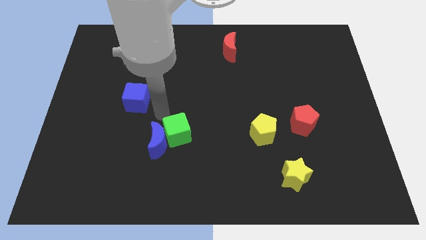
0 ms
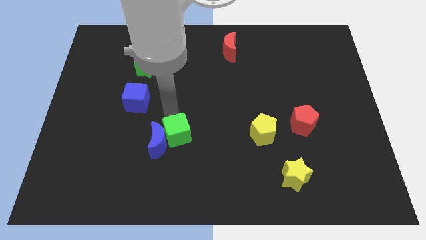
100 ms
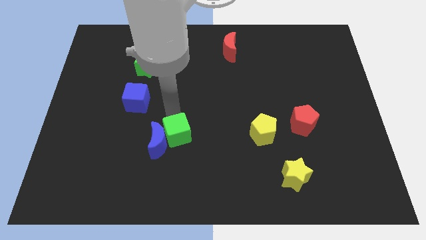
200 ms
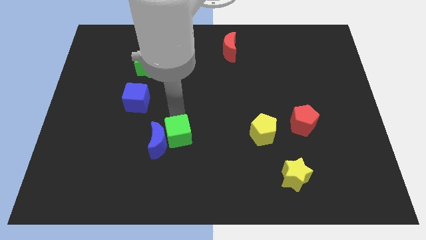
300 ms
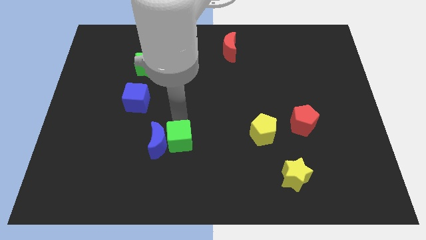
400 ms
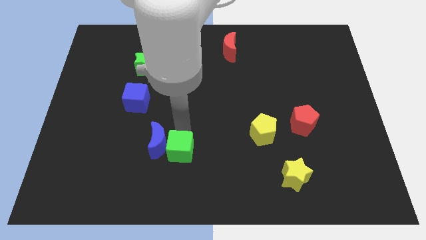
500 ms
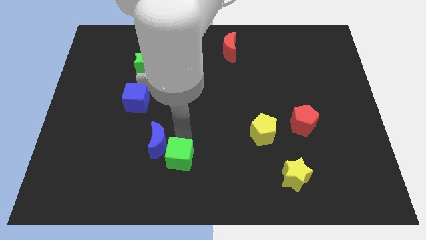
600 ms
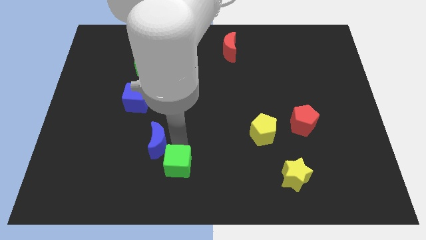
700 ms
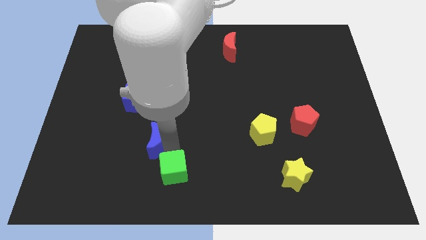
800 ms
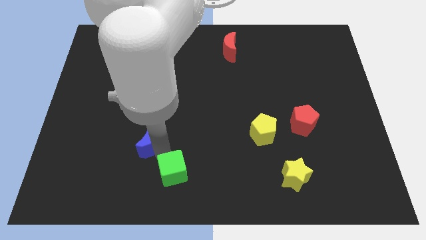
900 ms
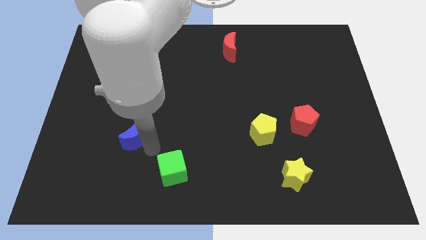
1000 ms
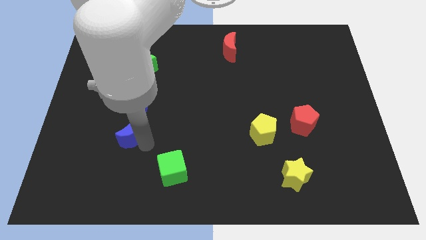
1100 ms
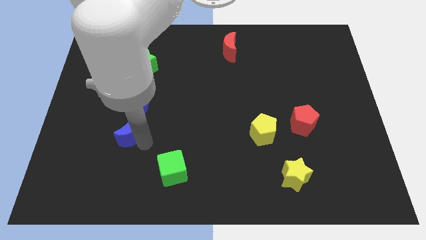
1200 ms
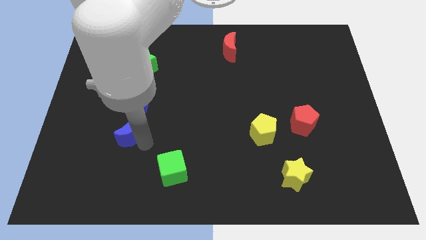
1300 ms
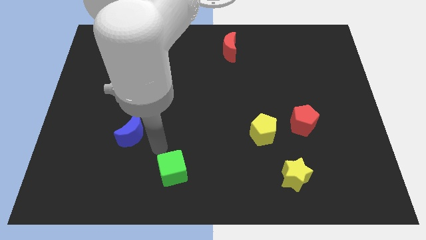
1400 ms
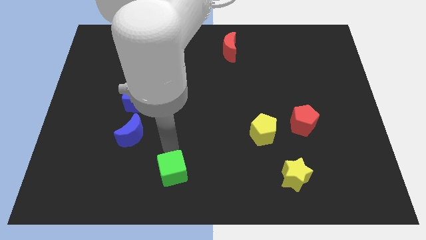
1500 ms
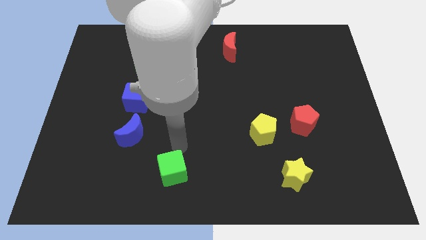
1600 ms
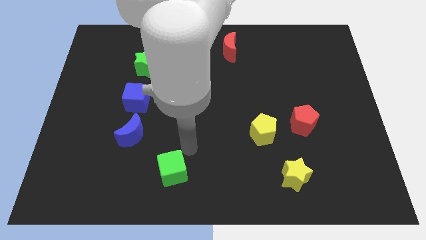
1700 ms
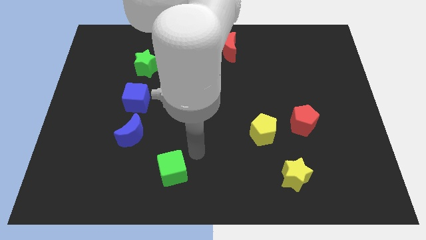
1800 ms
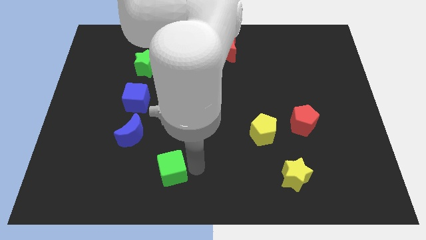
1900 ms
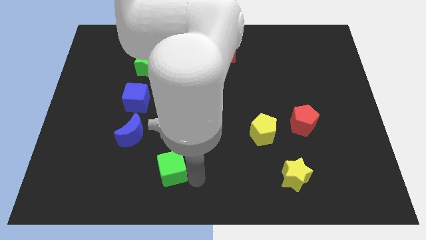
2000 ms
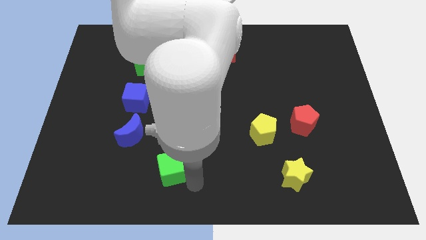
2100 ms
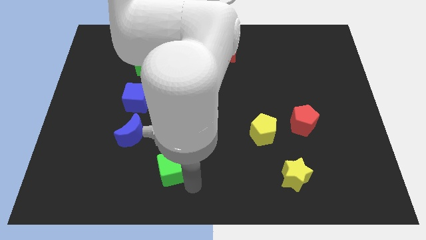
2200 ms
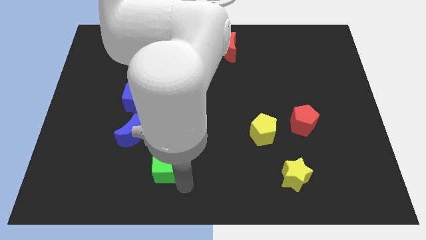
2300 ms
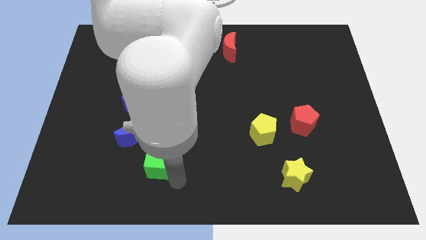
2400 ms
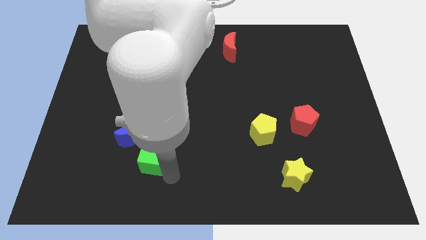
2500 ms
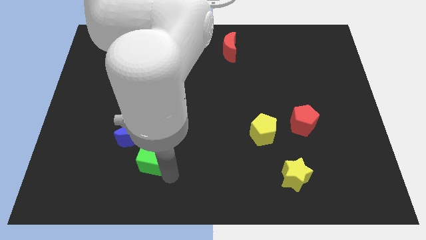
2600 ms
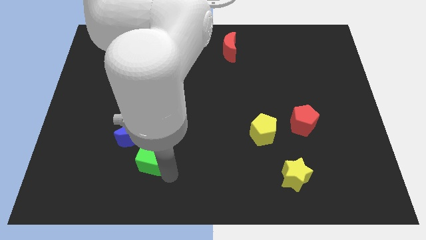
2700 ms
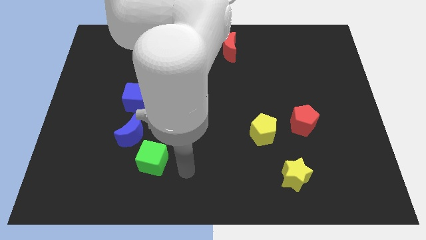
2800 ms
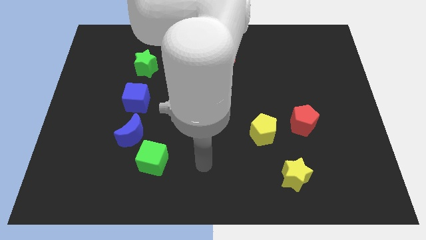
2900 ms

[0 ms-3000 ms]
separate the green cube and the blue crescent

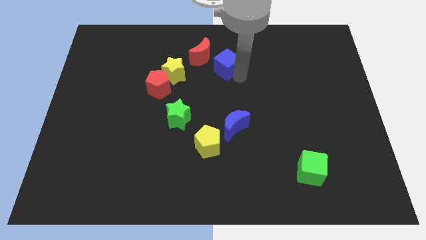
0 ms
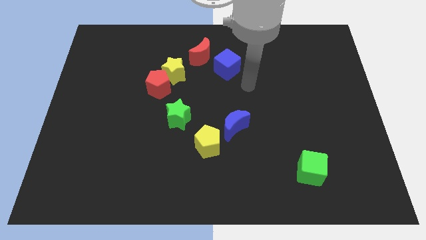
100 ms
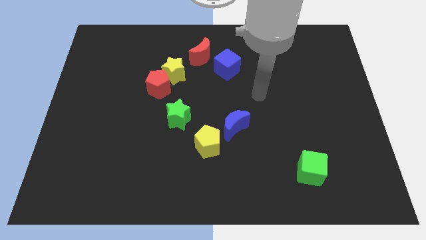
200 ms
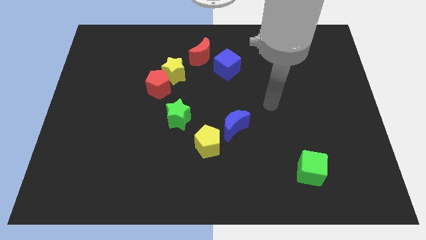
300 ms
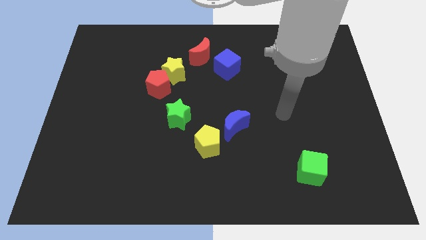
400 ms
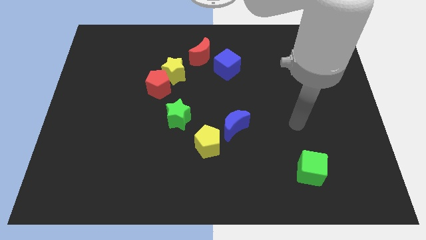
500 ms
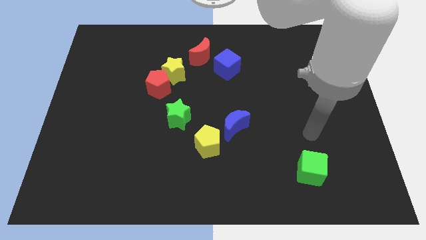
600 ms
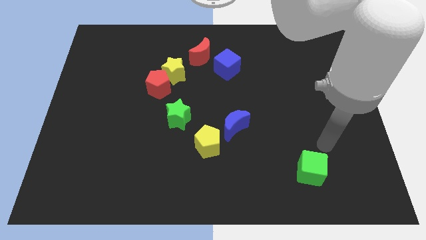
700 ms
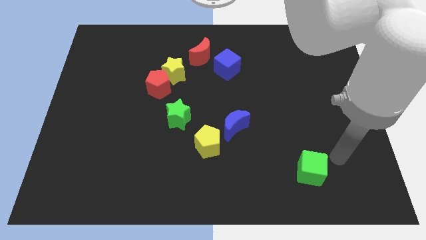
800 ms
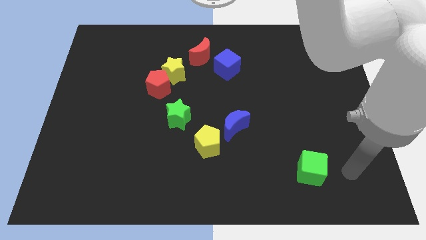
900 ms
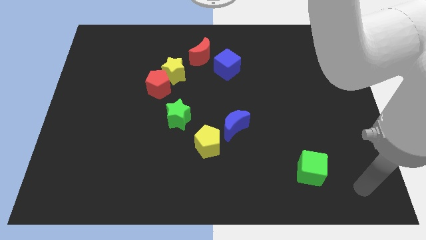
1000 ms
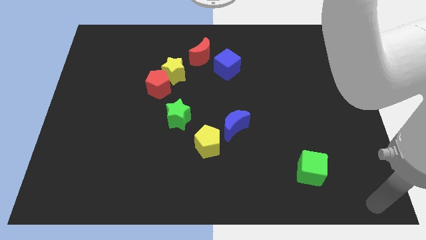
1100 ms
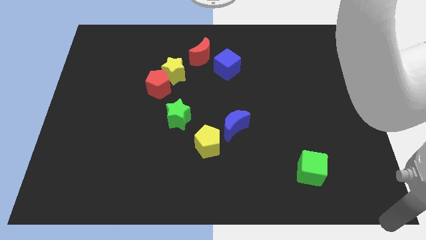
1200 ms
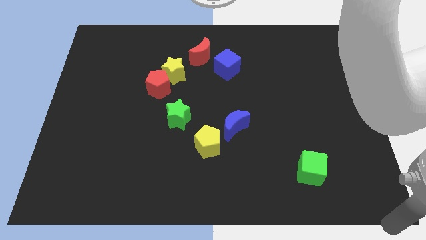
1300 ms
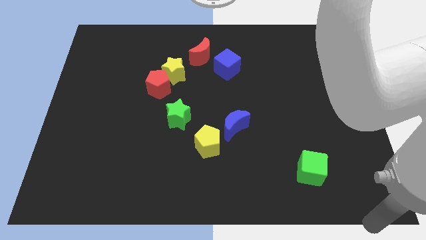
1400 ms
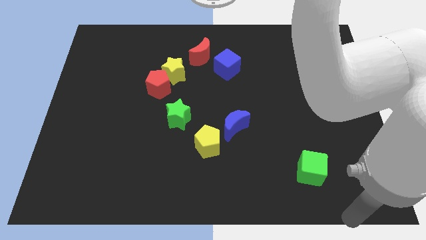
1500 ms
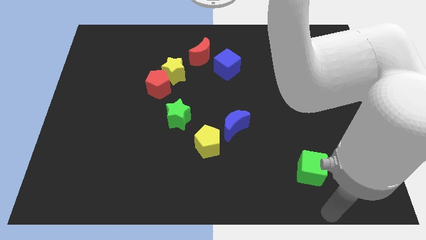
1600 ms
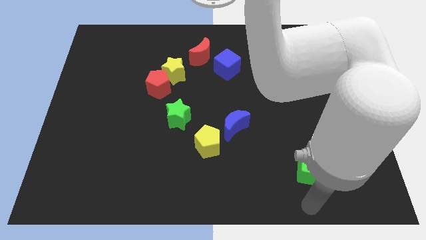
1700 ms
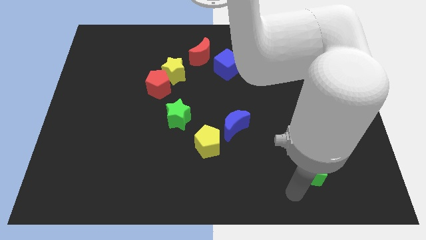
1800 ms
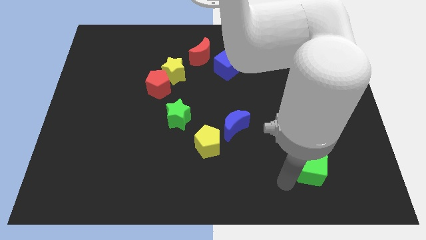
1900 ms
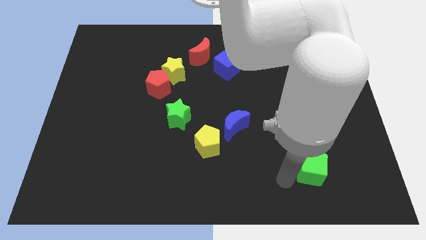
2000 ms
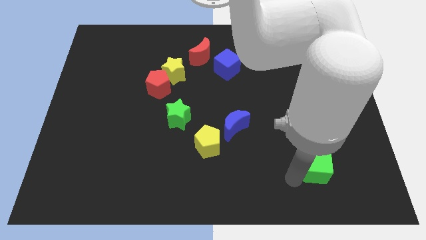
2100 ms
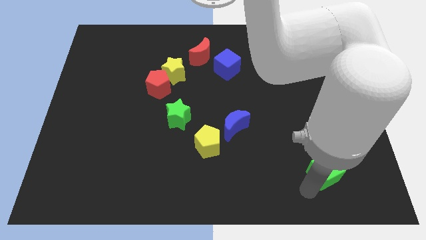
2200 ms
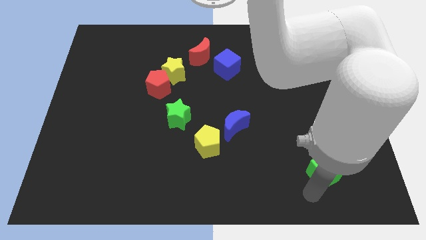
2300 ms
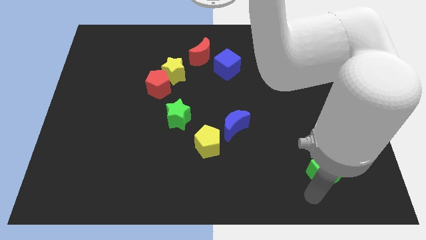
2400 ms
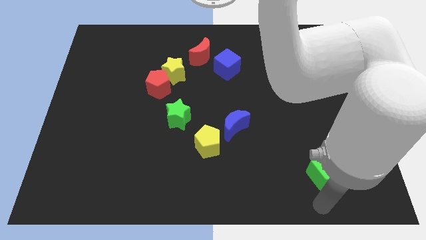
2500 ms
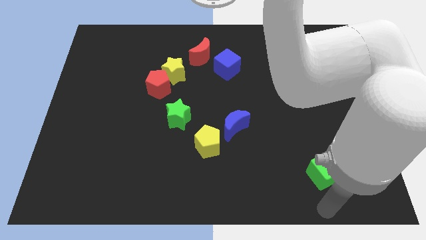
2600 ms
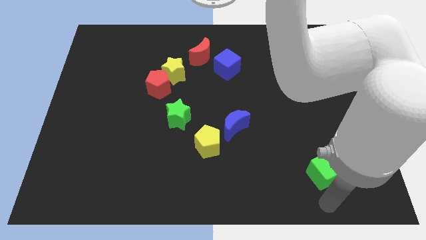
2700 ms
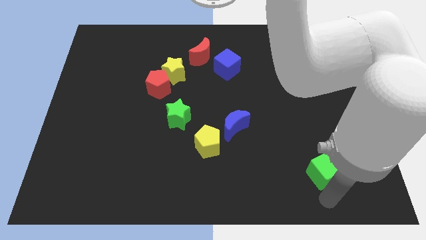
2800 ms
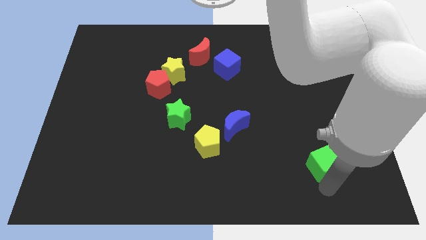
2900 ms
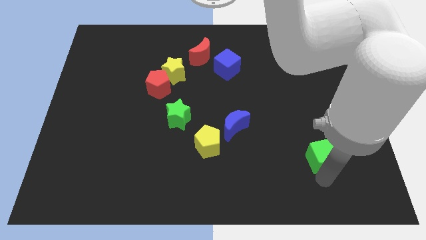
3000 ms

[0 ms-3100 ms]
push the green cube to the top of the board

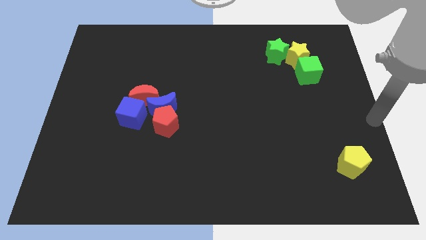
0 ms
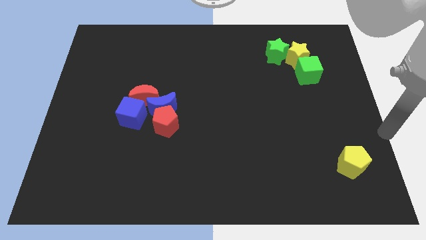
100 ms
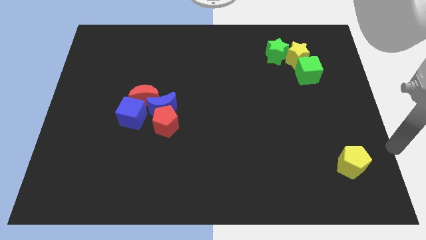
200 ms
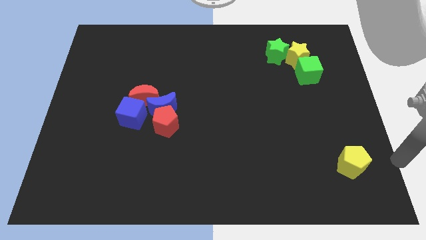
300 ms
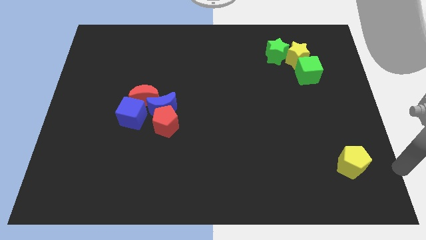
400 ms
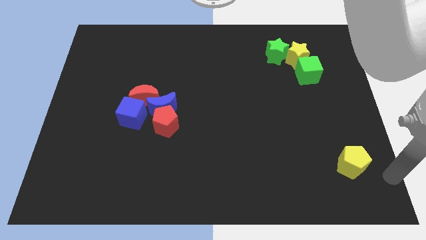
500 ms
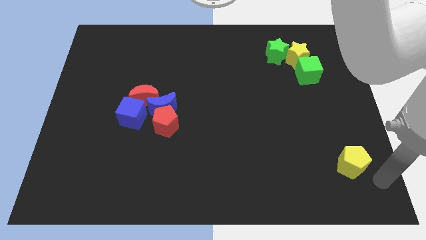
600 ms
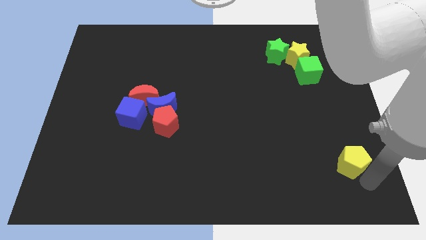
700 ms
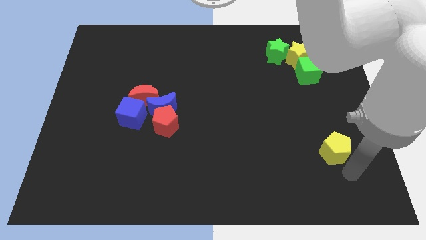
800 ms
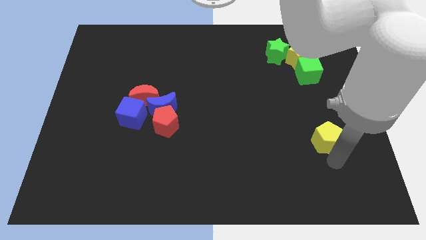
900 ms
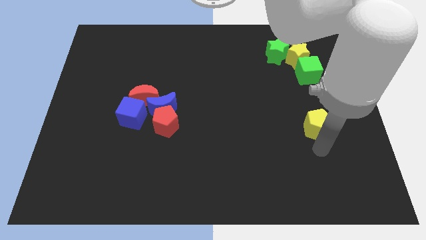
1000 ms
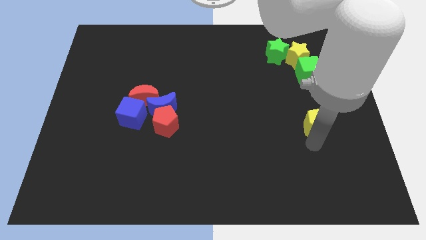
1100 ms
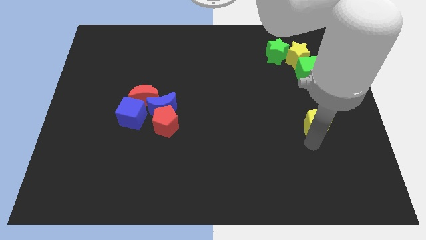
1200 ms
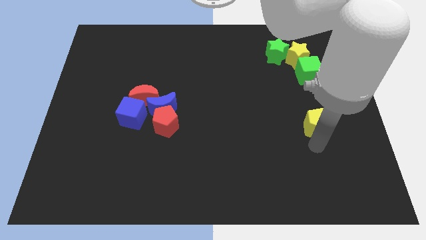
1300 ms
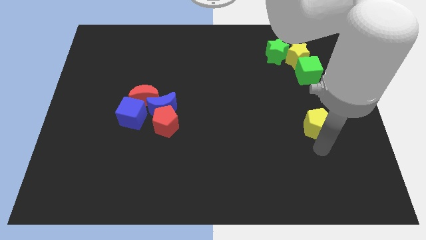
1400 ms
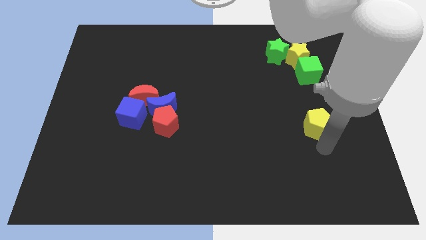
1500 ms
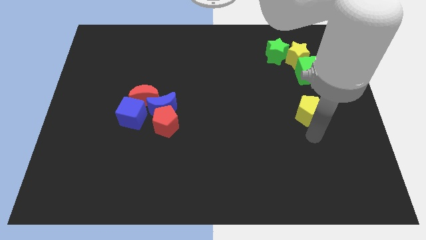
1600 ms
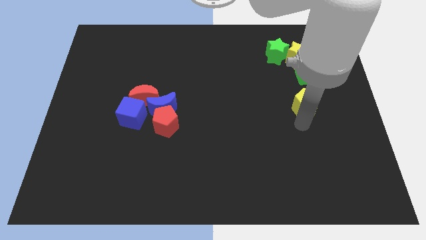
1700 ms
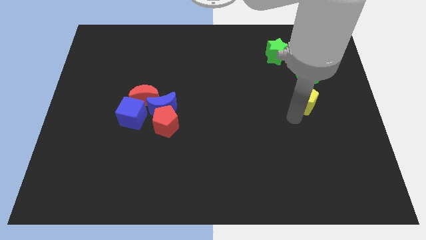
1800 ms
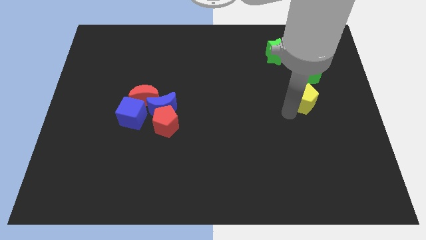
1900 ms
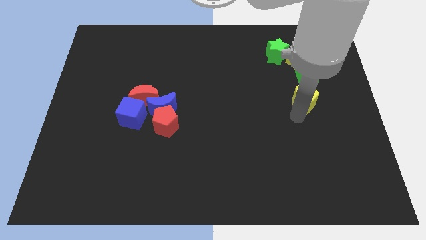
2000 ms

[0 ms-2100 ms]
move yellow pentagon below green cube

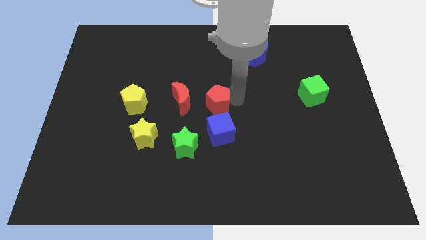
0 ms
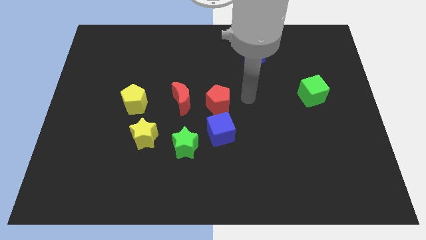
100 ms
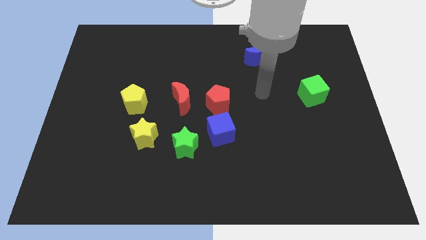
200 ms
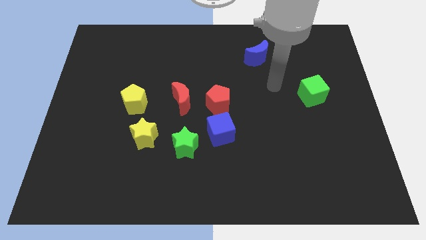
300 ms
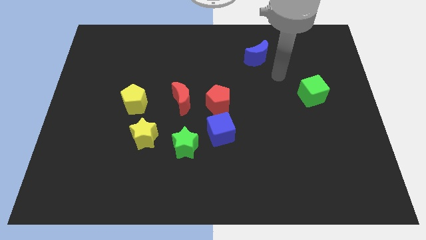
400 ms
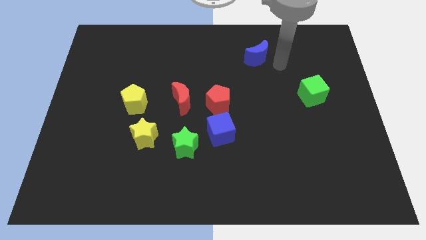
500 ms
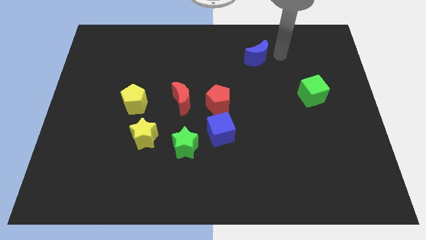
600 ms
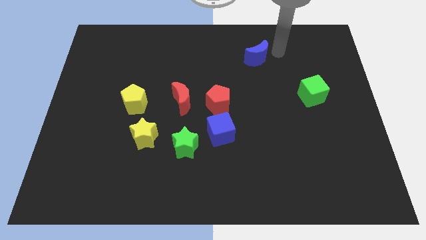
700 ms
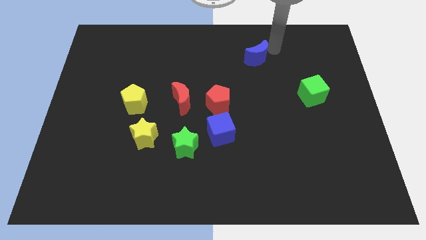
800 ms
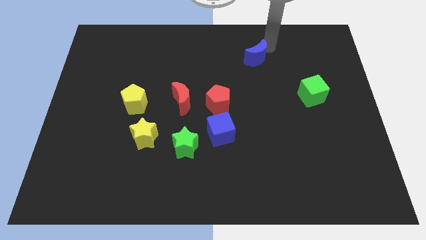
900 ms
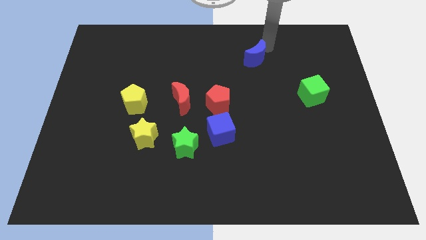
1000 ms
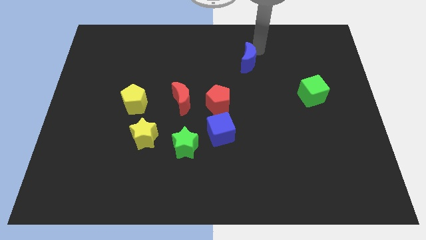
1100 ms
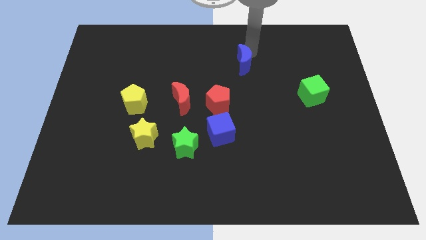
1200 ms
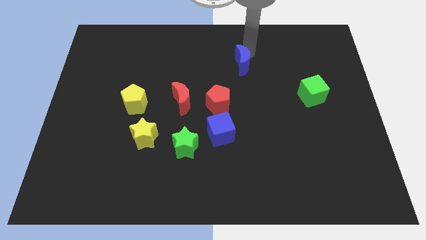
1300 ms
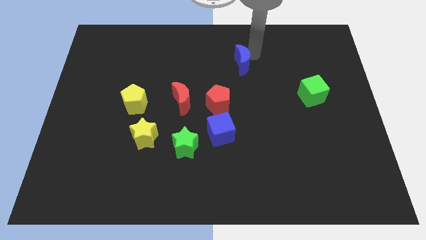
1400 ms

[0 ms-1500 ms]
move the arm away from the red pentagon
